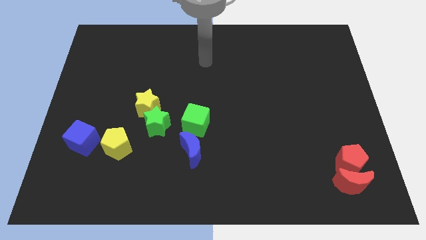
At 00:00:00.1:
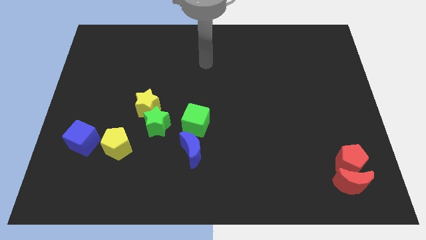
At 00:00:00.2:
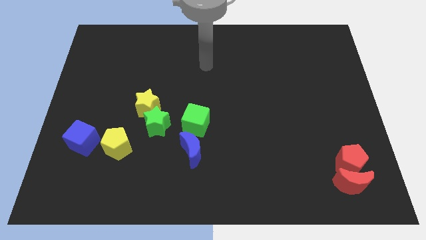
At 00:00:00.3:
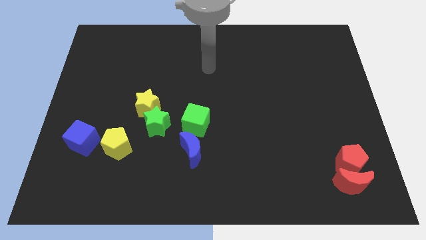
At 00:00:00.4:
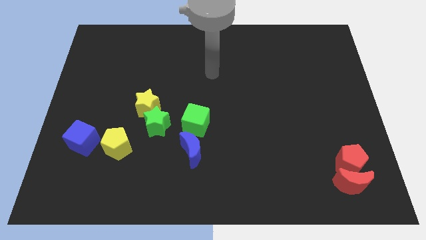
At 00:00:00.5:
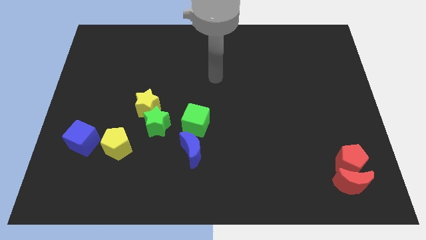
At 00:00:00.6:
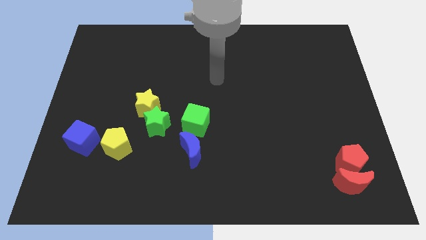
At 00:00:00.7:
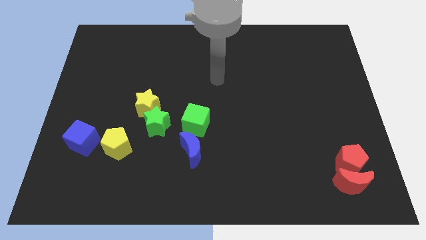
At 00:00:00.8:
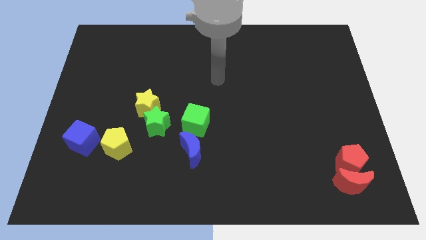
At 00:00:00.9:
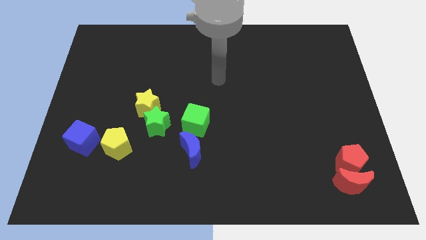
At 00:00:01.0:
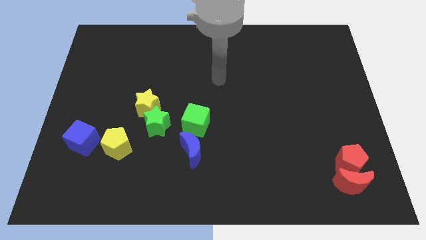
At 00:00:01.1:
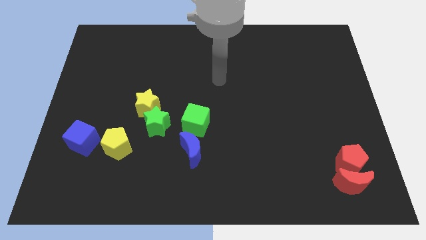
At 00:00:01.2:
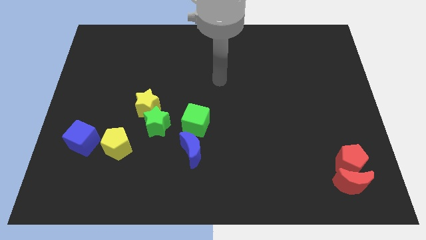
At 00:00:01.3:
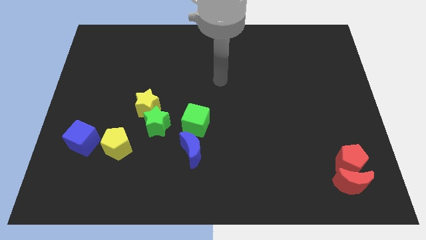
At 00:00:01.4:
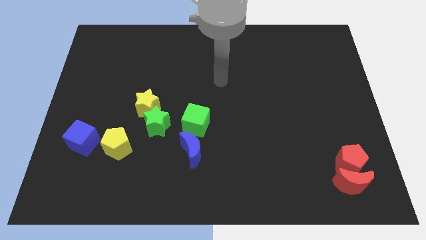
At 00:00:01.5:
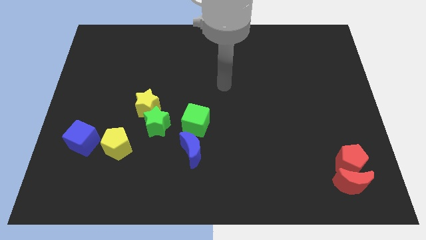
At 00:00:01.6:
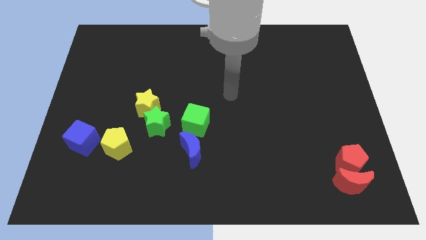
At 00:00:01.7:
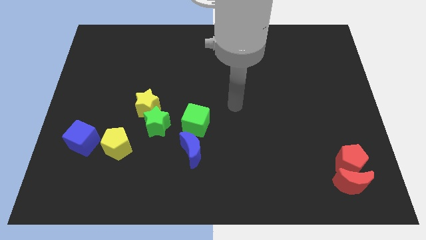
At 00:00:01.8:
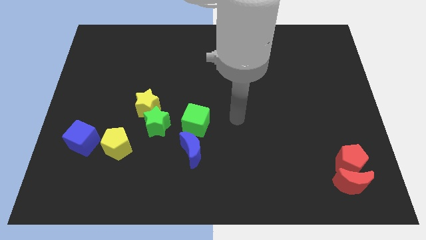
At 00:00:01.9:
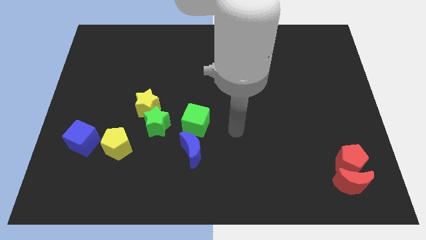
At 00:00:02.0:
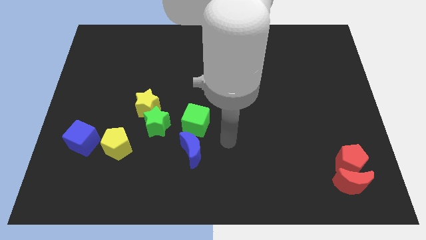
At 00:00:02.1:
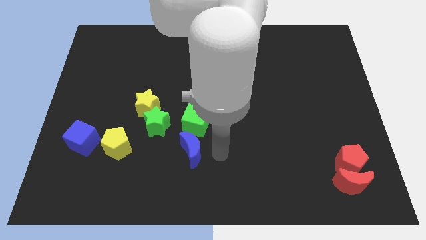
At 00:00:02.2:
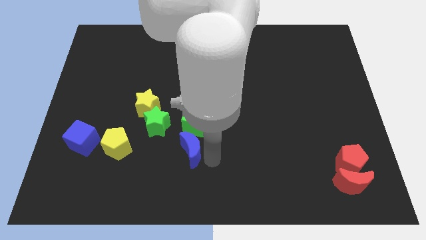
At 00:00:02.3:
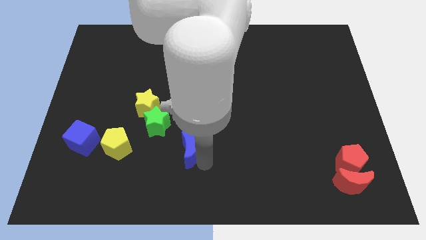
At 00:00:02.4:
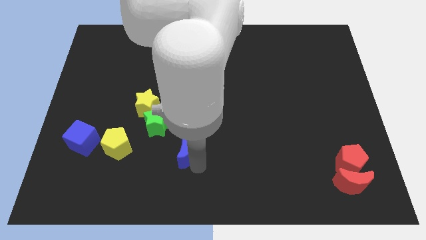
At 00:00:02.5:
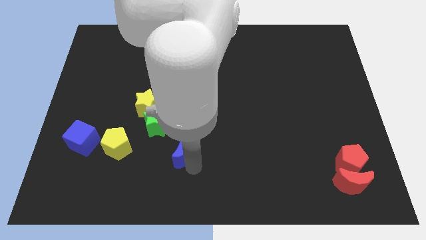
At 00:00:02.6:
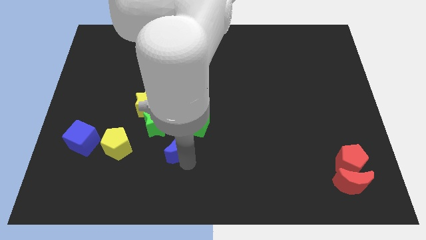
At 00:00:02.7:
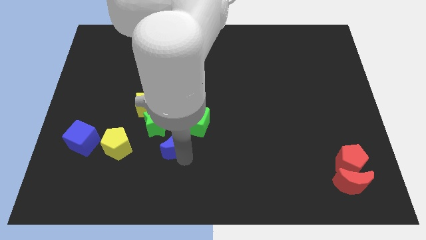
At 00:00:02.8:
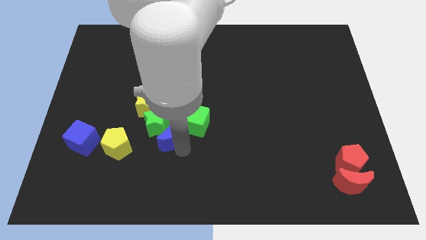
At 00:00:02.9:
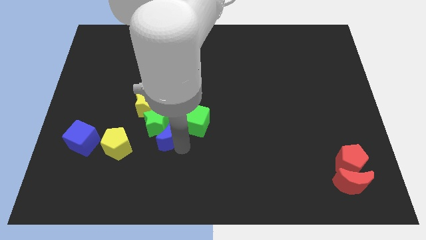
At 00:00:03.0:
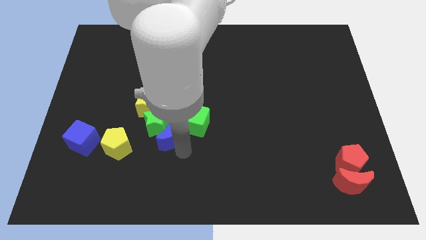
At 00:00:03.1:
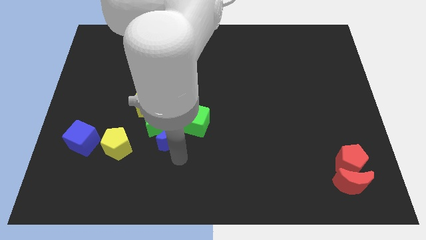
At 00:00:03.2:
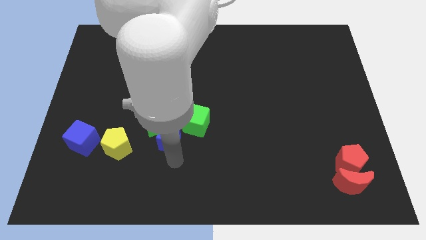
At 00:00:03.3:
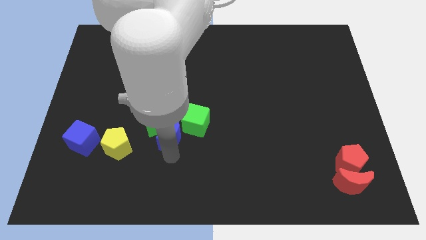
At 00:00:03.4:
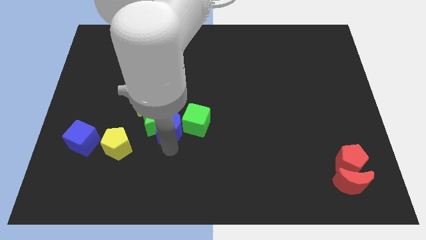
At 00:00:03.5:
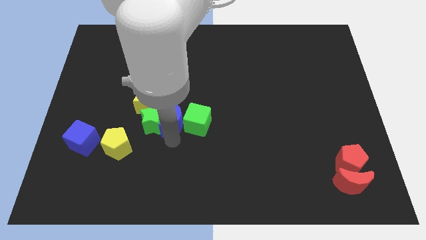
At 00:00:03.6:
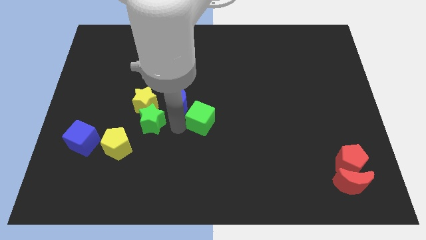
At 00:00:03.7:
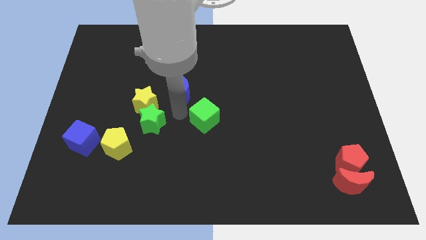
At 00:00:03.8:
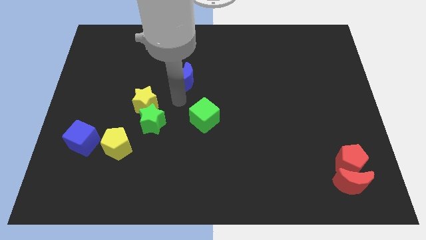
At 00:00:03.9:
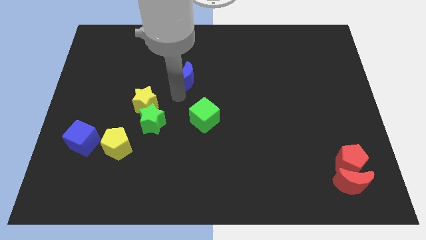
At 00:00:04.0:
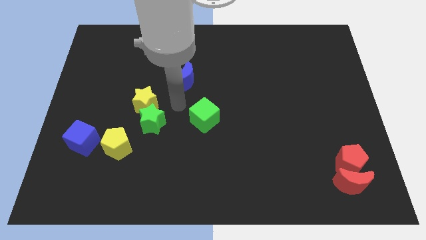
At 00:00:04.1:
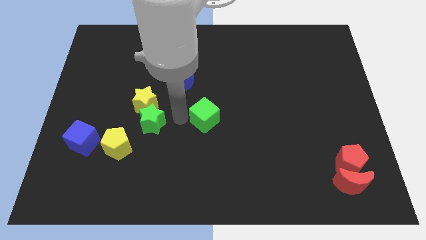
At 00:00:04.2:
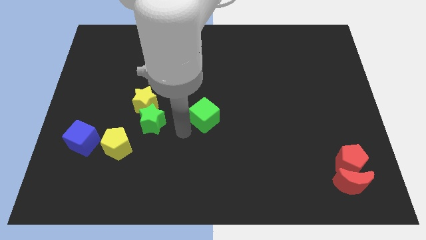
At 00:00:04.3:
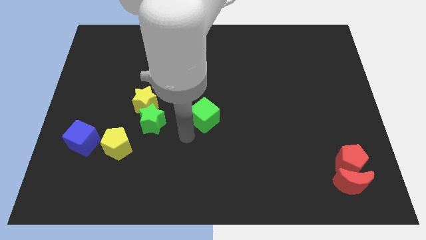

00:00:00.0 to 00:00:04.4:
push the blue crescent towards the top

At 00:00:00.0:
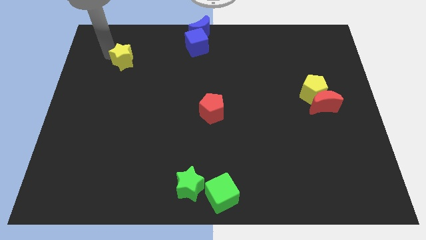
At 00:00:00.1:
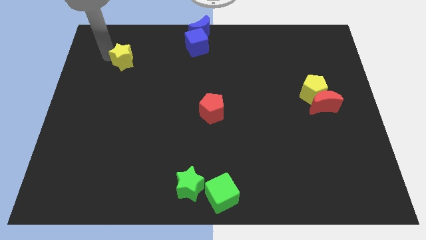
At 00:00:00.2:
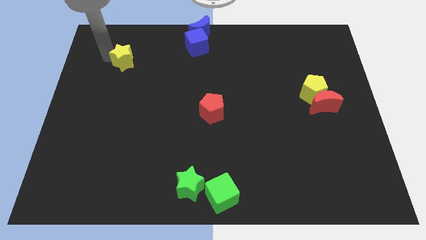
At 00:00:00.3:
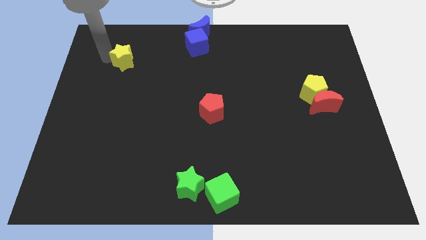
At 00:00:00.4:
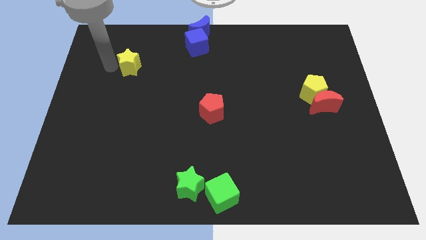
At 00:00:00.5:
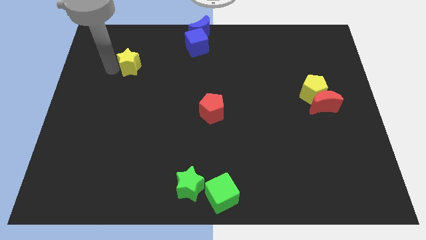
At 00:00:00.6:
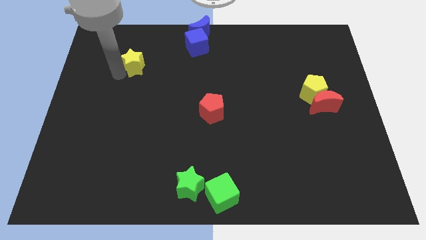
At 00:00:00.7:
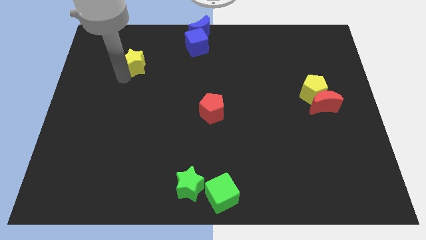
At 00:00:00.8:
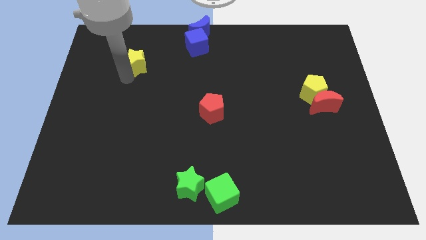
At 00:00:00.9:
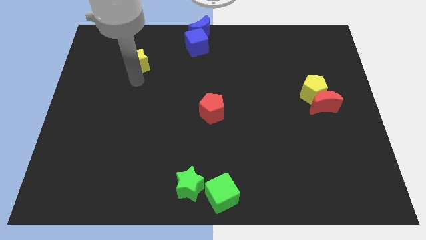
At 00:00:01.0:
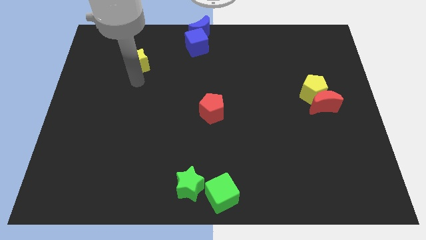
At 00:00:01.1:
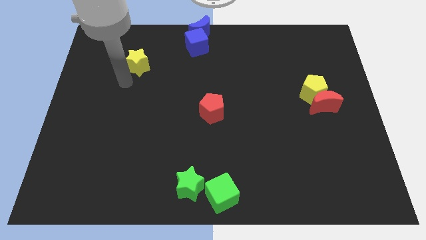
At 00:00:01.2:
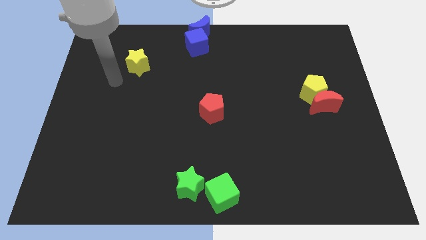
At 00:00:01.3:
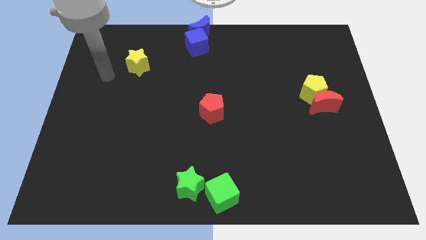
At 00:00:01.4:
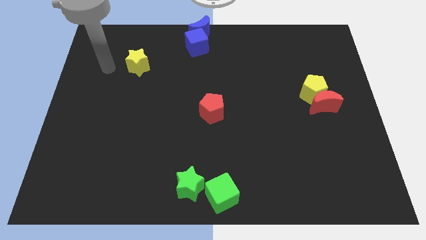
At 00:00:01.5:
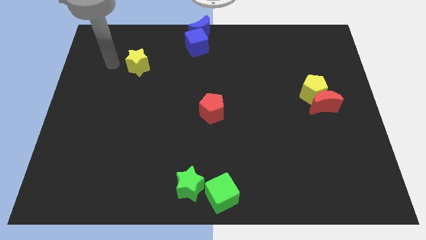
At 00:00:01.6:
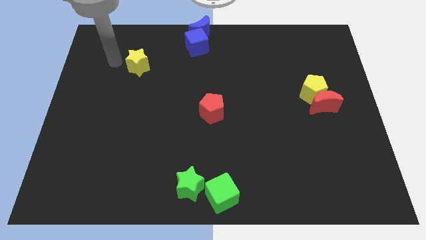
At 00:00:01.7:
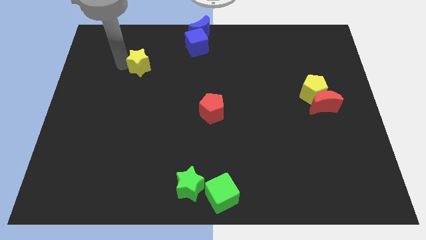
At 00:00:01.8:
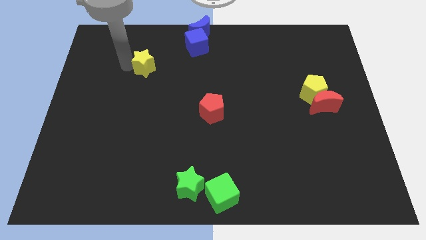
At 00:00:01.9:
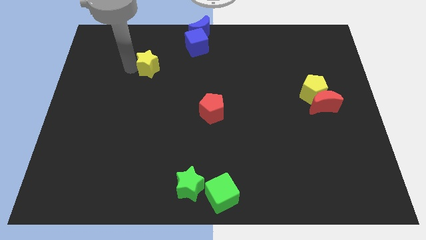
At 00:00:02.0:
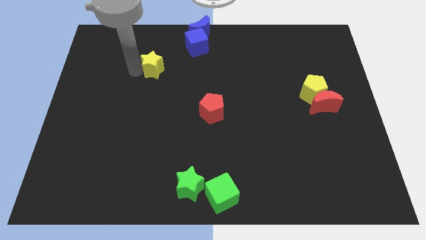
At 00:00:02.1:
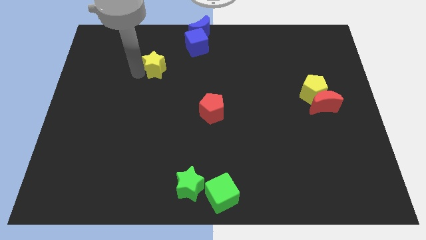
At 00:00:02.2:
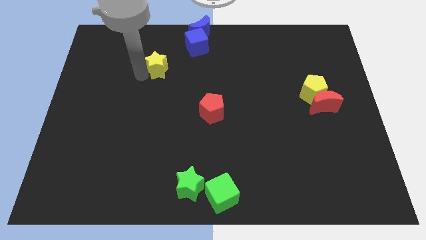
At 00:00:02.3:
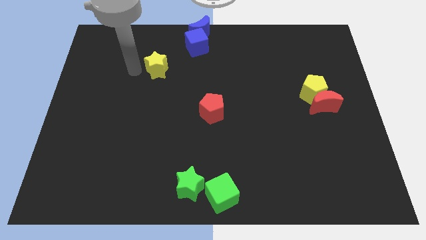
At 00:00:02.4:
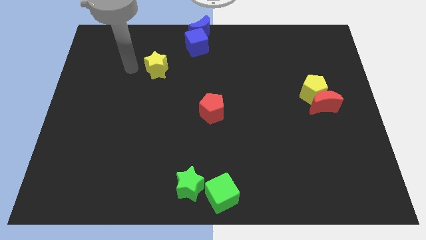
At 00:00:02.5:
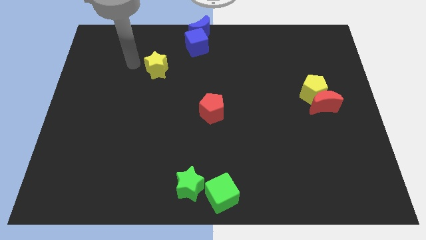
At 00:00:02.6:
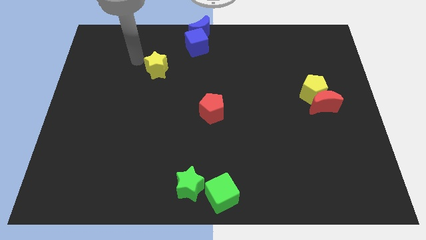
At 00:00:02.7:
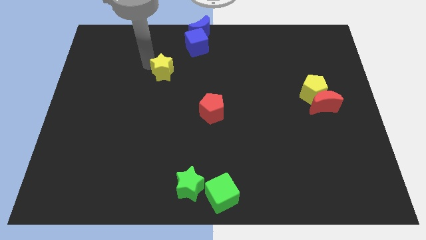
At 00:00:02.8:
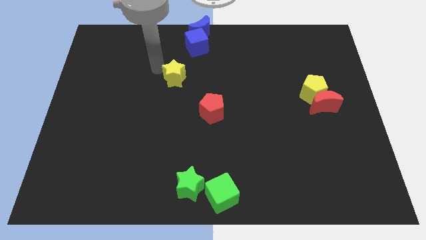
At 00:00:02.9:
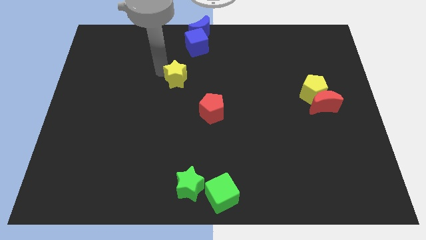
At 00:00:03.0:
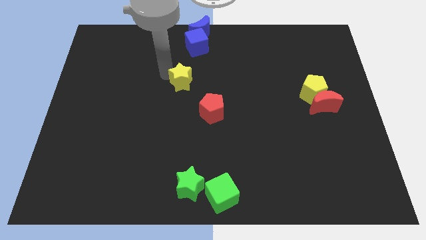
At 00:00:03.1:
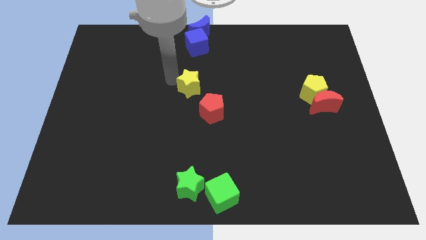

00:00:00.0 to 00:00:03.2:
move the yellow star towards the red pentagon

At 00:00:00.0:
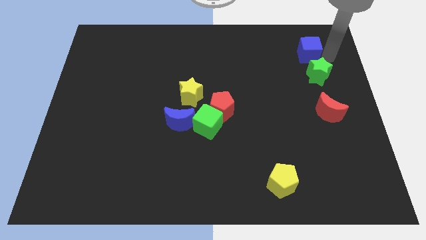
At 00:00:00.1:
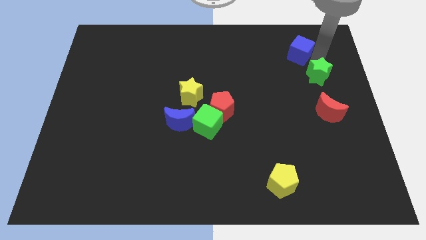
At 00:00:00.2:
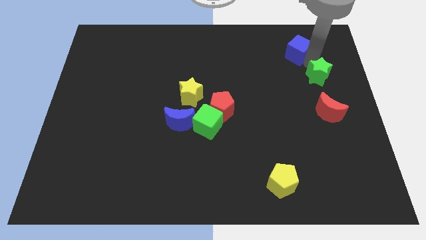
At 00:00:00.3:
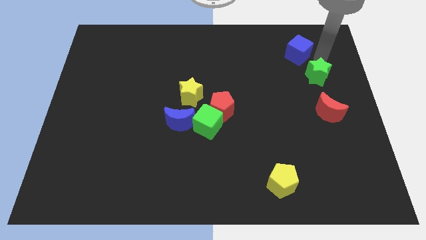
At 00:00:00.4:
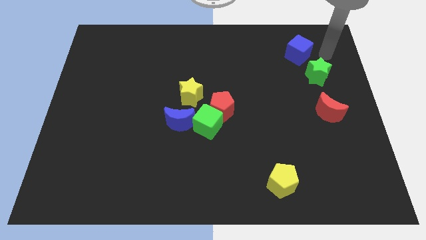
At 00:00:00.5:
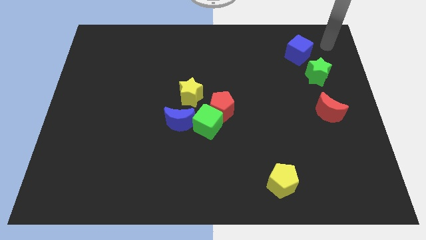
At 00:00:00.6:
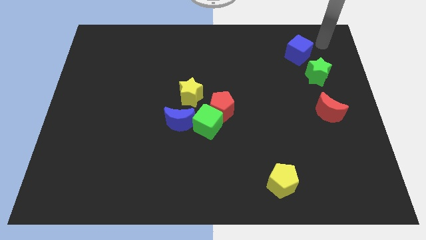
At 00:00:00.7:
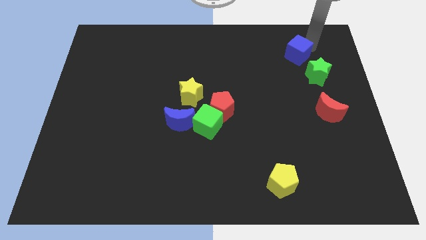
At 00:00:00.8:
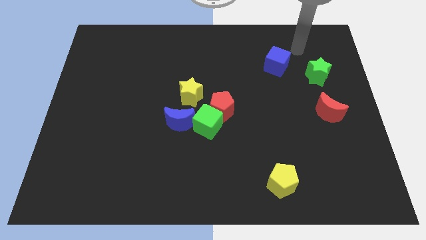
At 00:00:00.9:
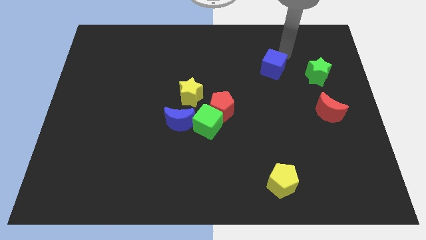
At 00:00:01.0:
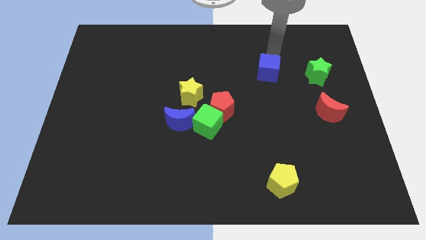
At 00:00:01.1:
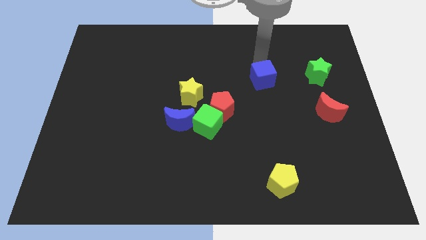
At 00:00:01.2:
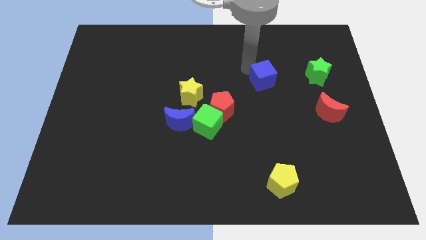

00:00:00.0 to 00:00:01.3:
separate blue cube from green star
